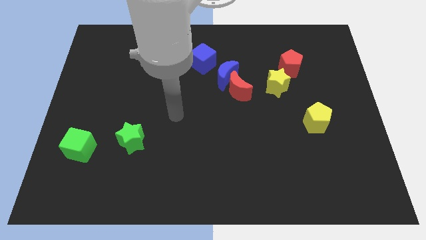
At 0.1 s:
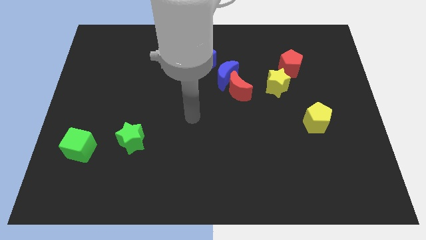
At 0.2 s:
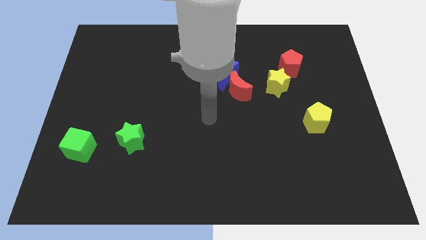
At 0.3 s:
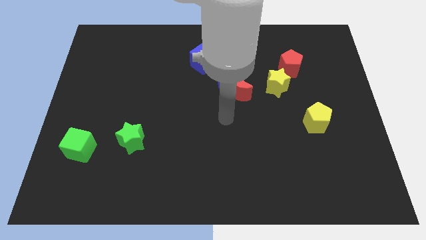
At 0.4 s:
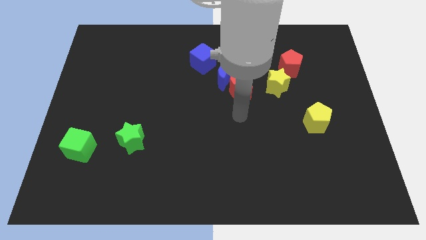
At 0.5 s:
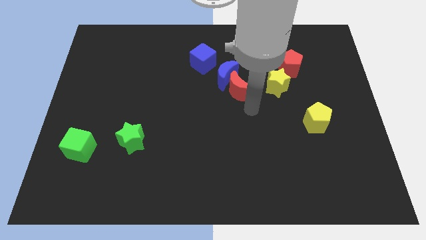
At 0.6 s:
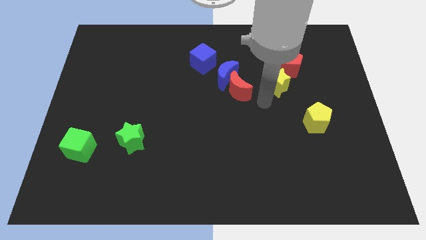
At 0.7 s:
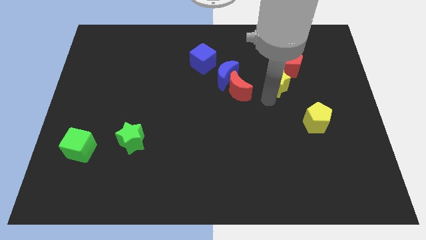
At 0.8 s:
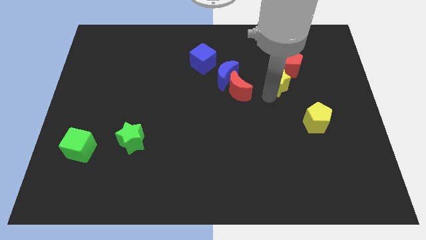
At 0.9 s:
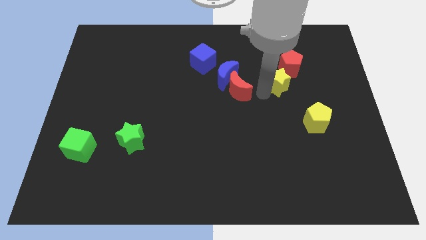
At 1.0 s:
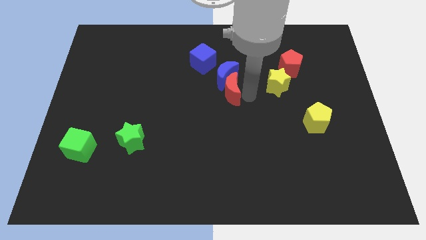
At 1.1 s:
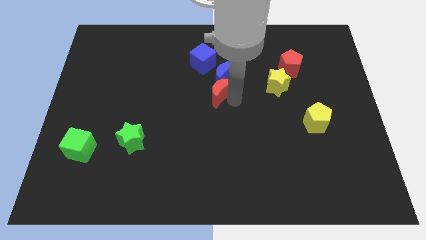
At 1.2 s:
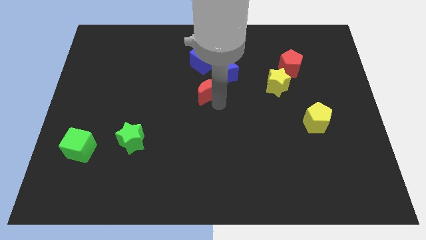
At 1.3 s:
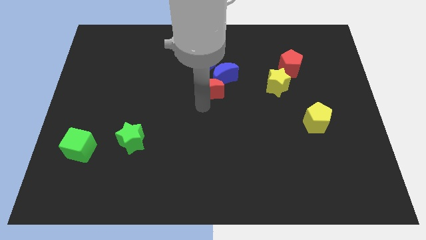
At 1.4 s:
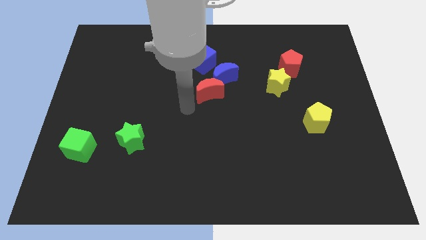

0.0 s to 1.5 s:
push red crescent to the bottom left to the blue crescent

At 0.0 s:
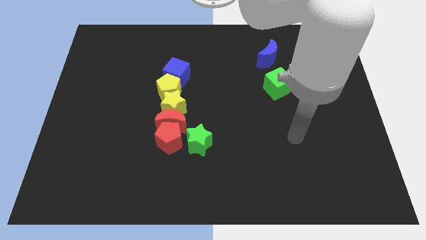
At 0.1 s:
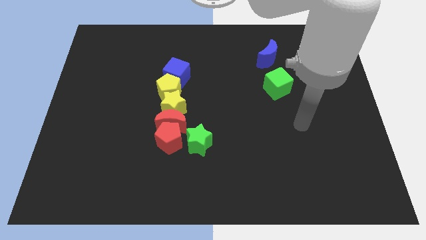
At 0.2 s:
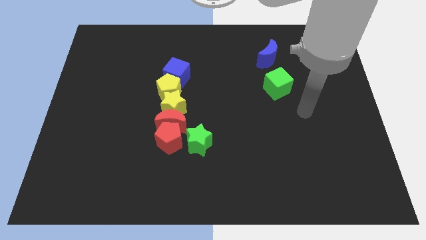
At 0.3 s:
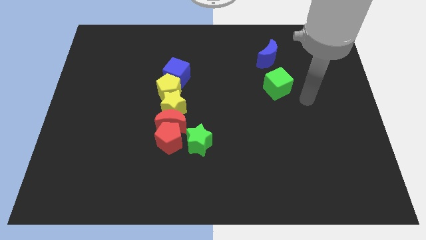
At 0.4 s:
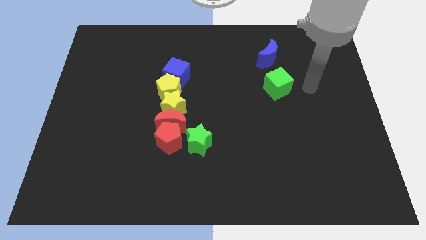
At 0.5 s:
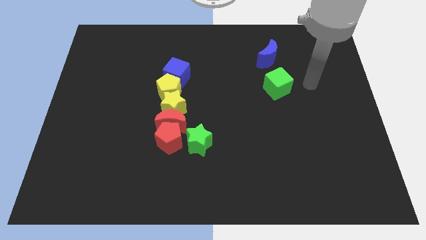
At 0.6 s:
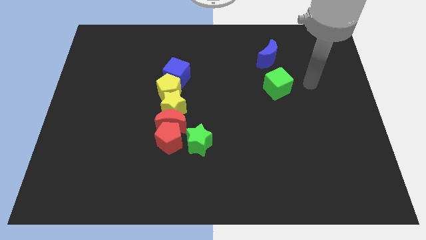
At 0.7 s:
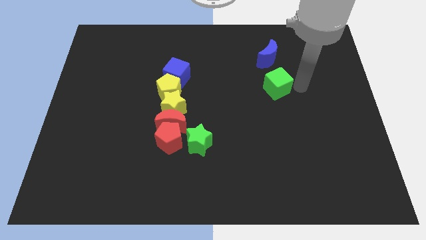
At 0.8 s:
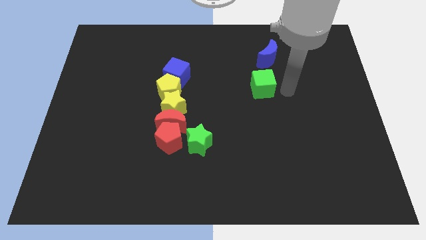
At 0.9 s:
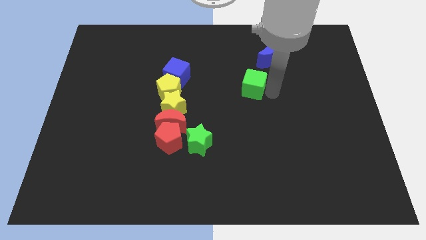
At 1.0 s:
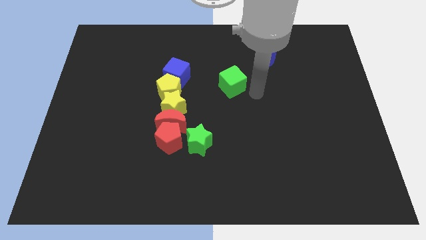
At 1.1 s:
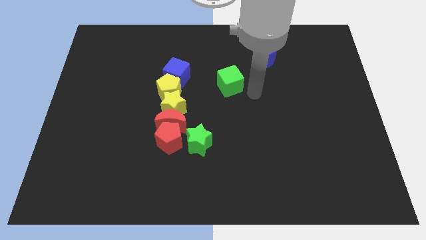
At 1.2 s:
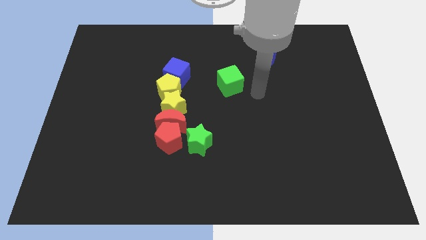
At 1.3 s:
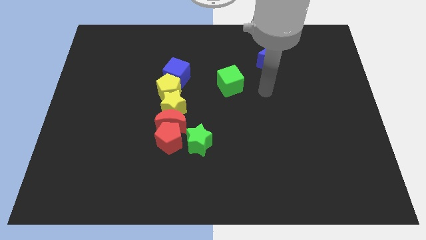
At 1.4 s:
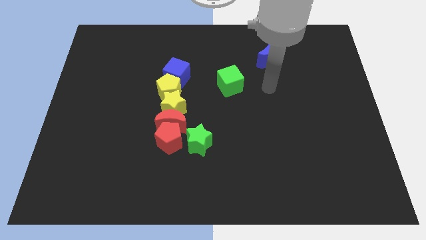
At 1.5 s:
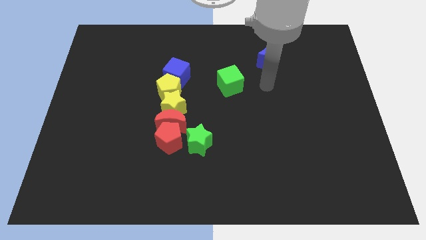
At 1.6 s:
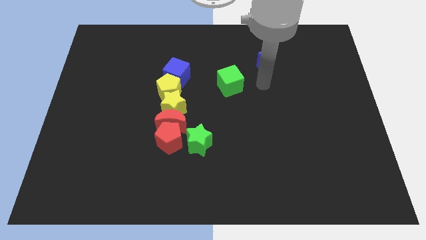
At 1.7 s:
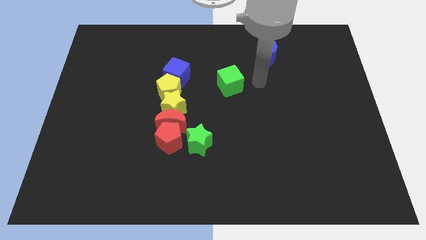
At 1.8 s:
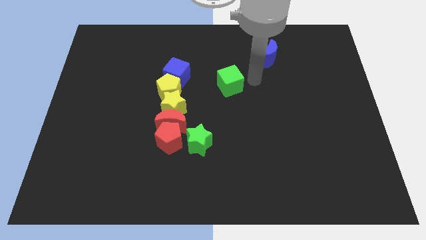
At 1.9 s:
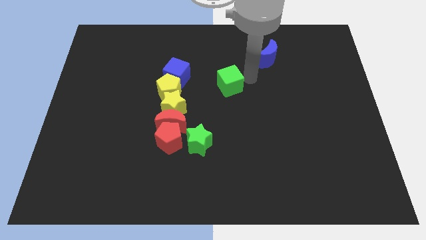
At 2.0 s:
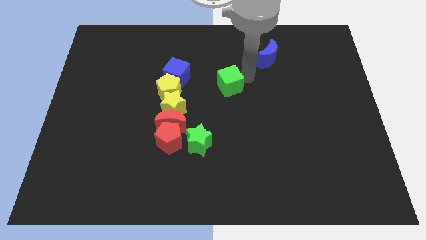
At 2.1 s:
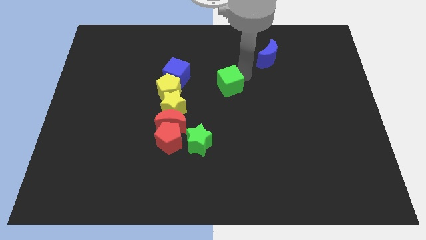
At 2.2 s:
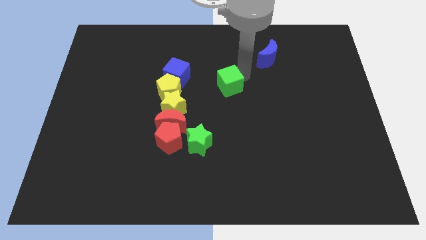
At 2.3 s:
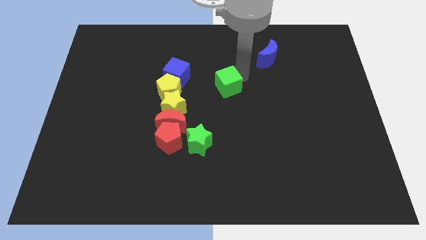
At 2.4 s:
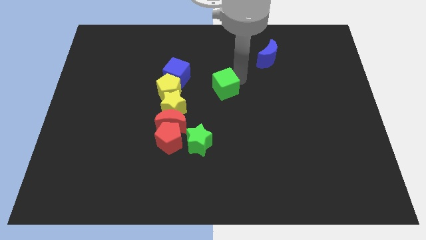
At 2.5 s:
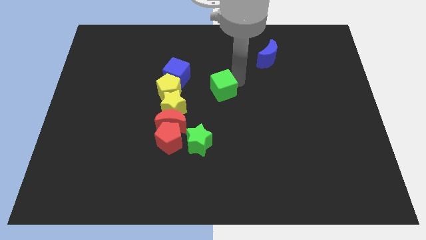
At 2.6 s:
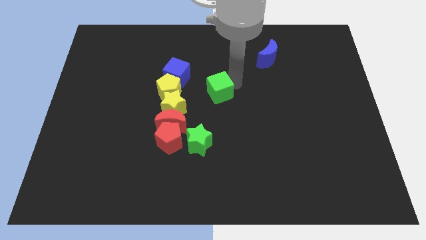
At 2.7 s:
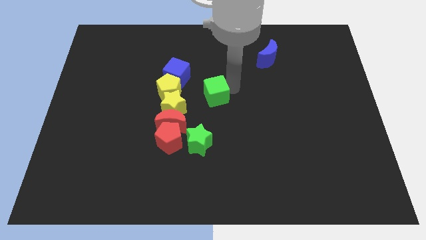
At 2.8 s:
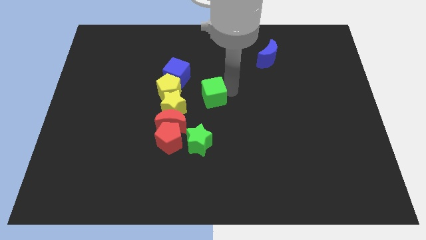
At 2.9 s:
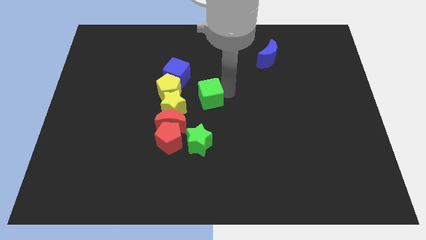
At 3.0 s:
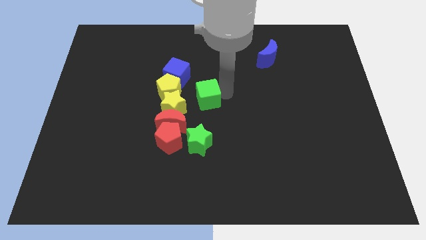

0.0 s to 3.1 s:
place the green cube diagonally to the blue crescent

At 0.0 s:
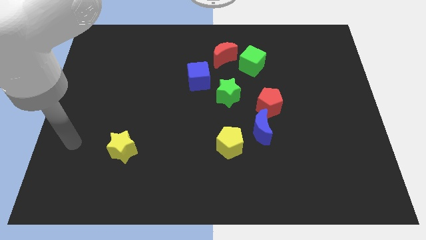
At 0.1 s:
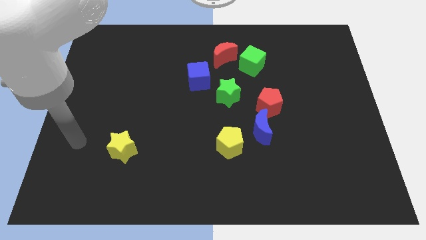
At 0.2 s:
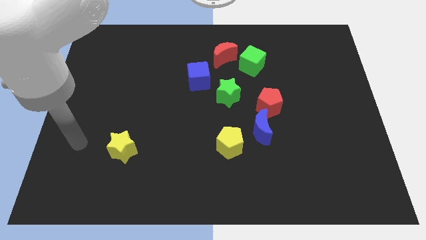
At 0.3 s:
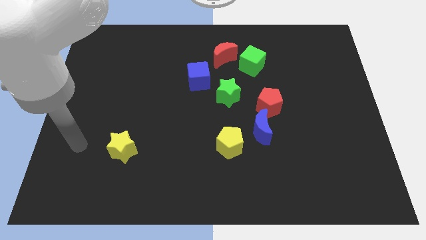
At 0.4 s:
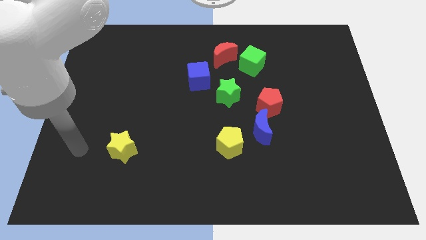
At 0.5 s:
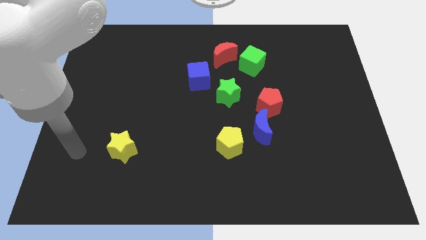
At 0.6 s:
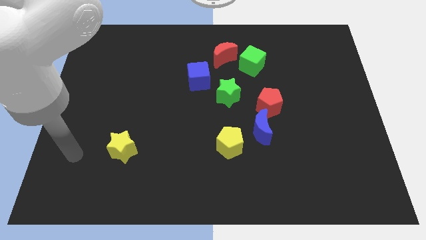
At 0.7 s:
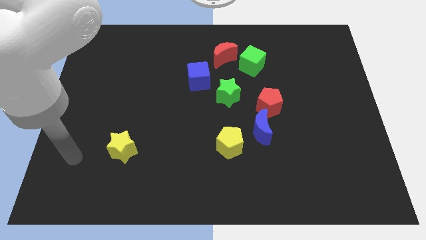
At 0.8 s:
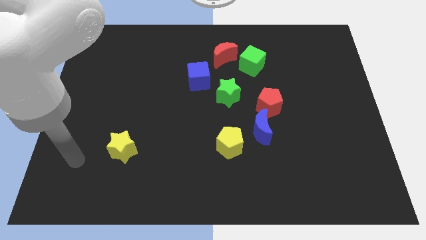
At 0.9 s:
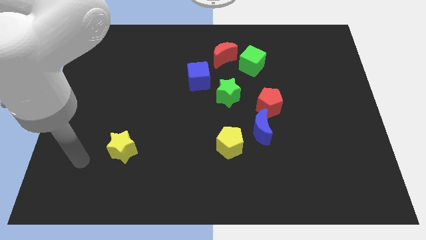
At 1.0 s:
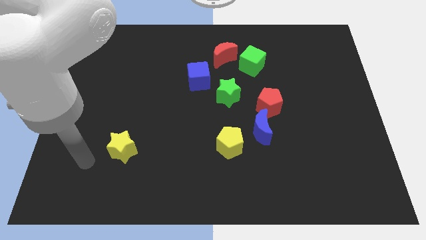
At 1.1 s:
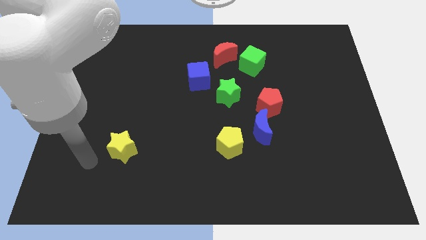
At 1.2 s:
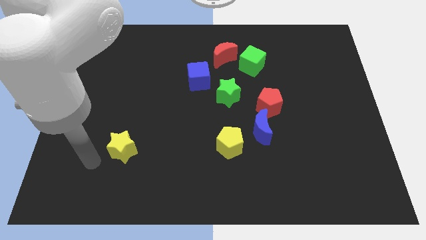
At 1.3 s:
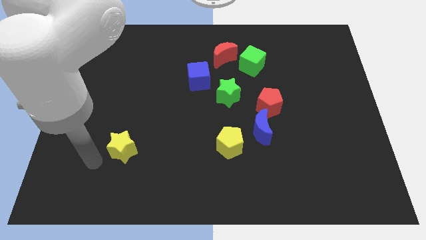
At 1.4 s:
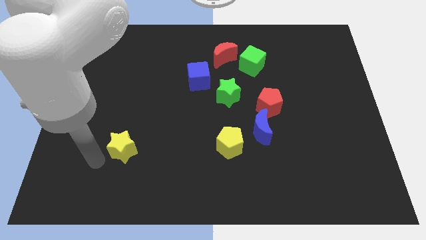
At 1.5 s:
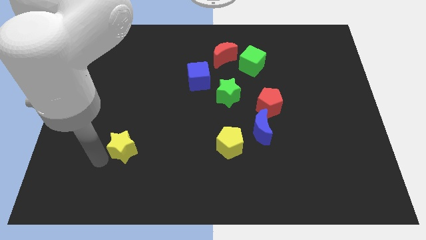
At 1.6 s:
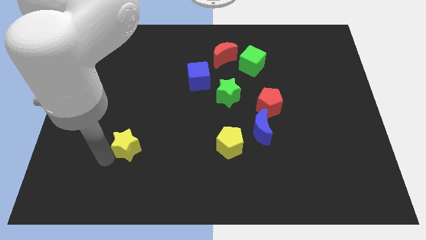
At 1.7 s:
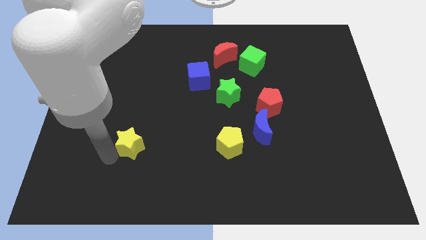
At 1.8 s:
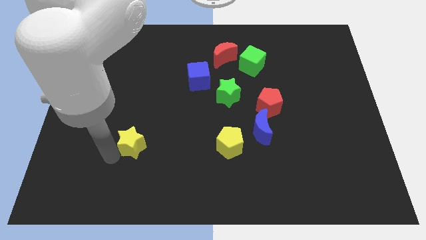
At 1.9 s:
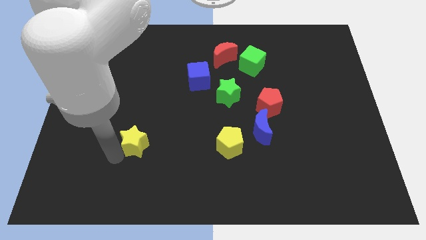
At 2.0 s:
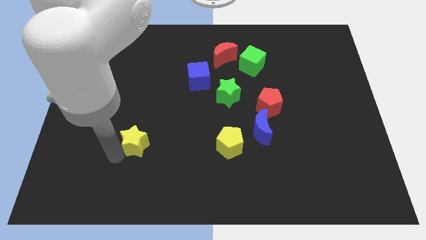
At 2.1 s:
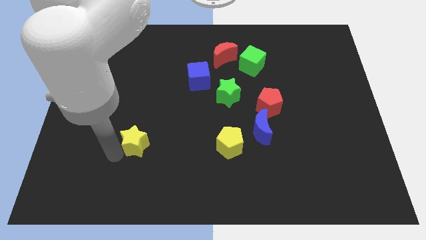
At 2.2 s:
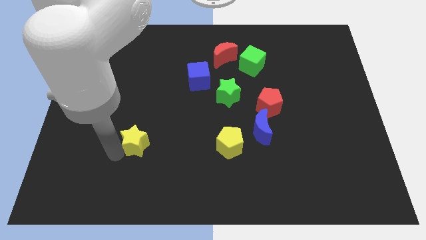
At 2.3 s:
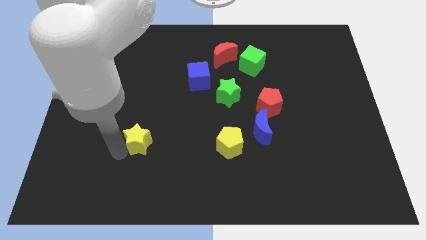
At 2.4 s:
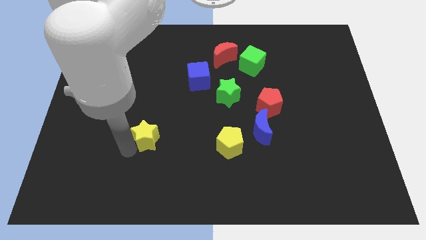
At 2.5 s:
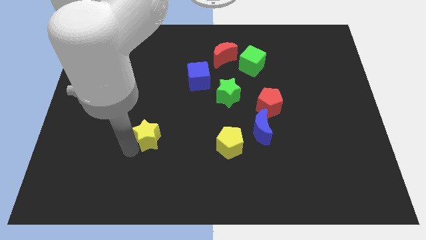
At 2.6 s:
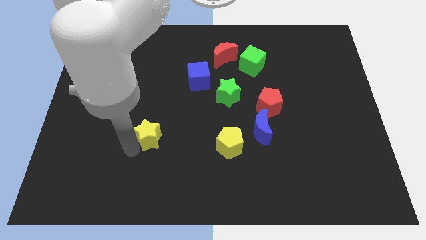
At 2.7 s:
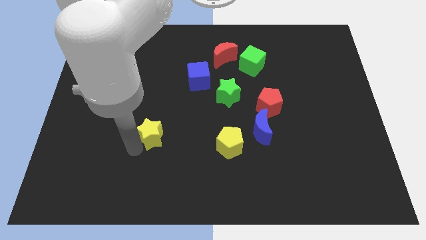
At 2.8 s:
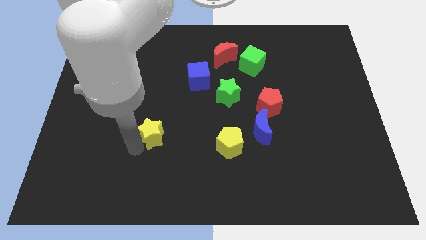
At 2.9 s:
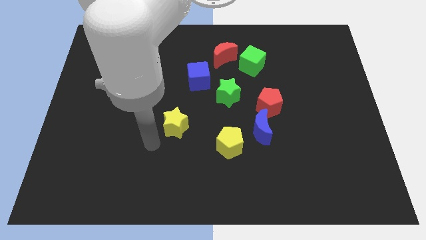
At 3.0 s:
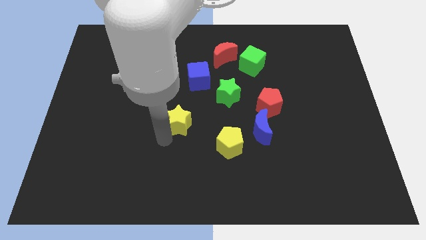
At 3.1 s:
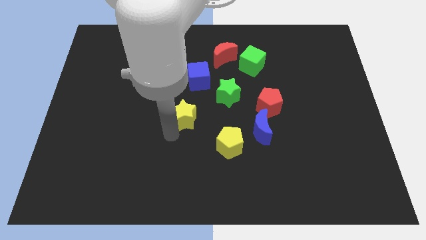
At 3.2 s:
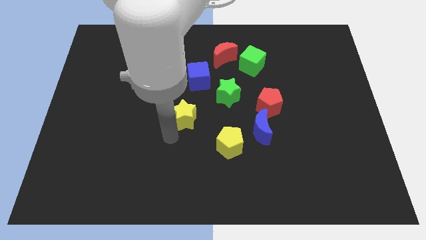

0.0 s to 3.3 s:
push the yellow star towards green star

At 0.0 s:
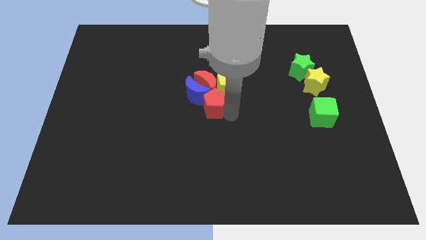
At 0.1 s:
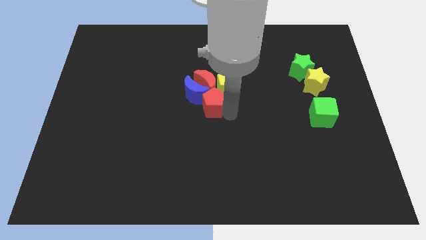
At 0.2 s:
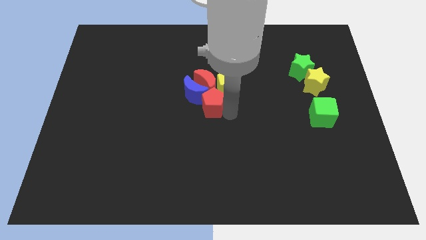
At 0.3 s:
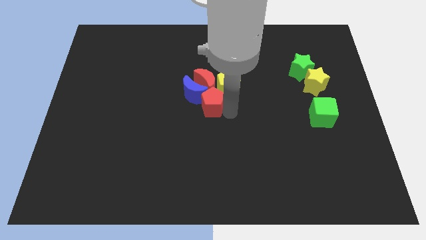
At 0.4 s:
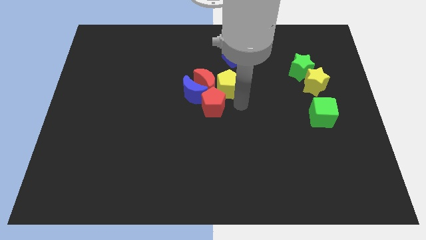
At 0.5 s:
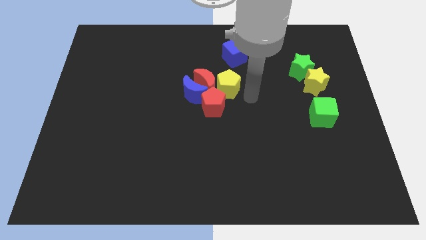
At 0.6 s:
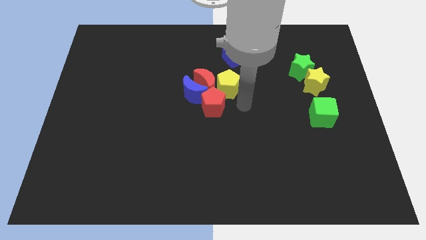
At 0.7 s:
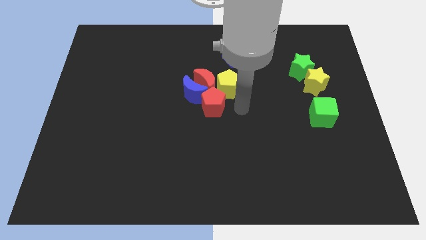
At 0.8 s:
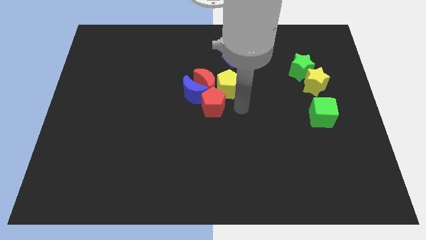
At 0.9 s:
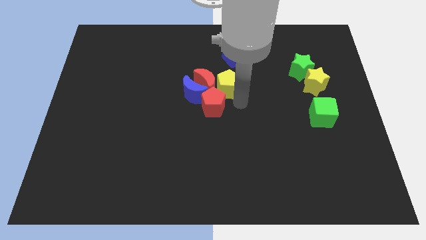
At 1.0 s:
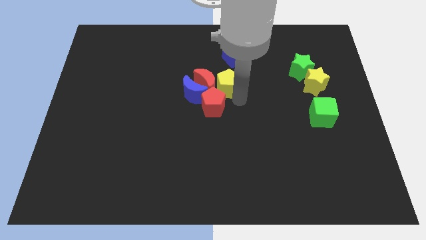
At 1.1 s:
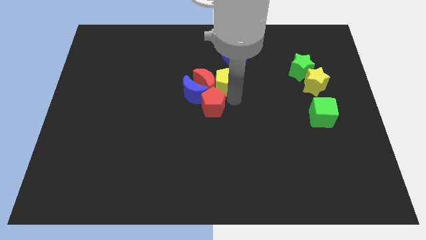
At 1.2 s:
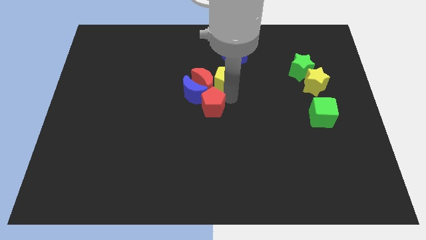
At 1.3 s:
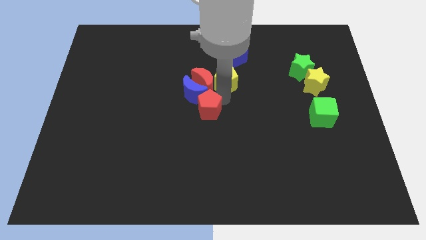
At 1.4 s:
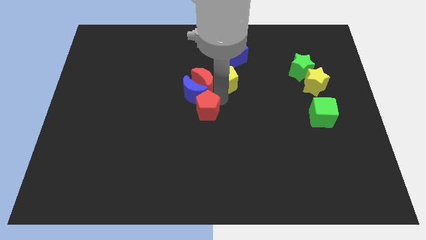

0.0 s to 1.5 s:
separate red pentagon and yellow pentagon
